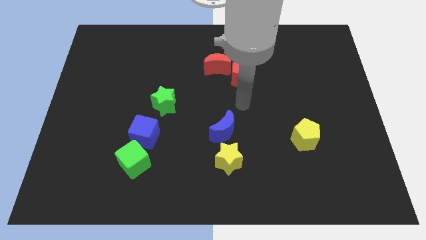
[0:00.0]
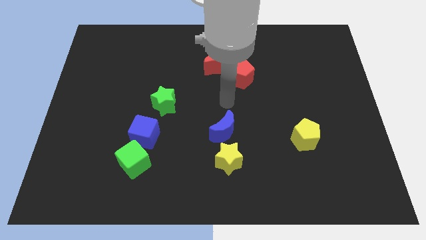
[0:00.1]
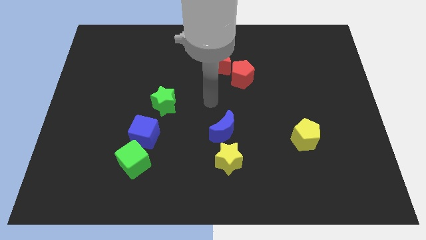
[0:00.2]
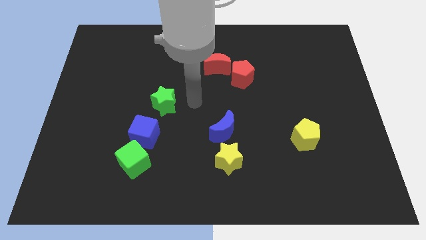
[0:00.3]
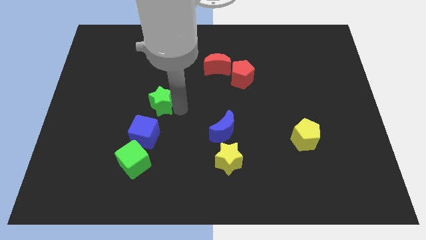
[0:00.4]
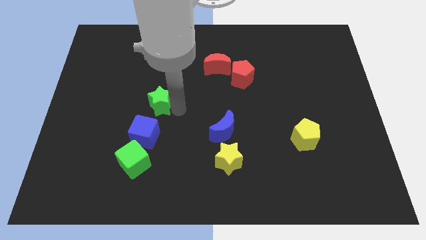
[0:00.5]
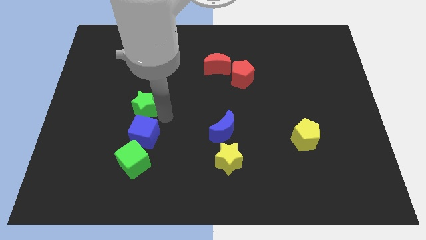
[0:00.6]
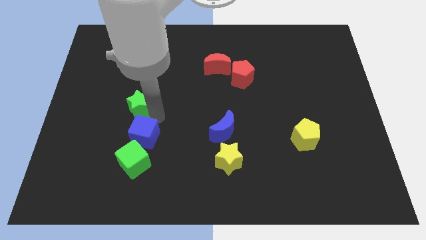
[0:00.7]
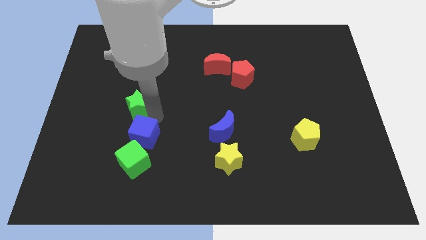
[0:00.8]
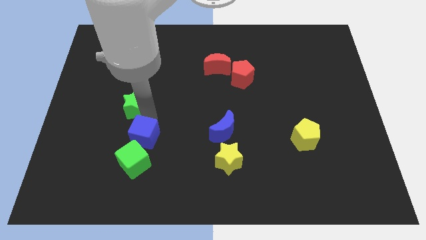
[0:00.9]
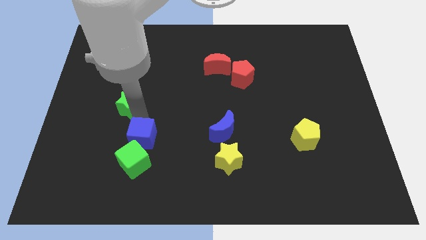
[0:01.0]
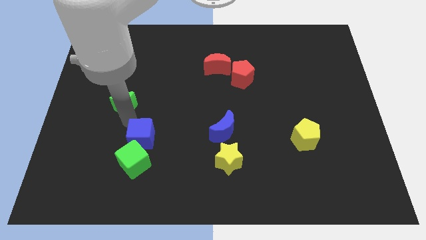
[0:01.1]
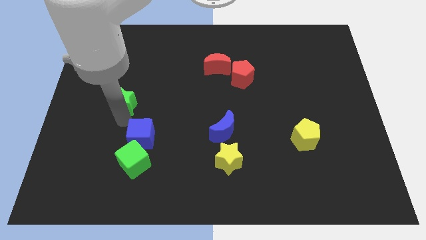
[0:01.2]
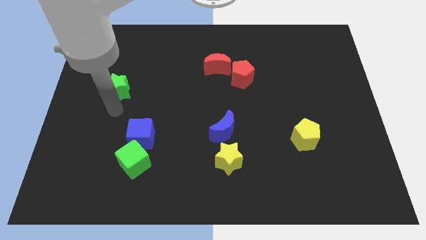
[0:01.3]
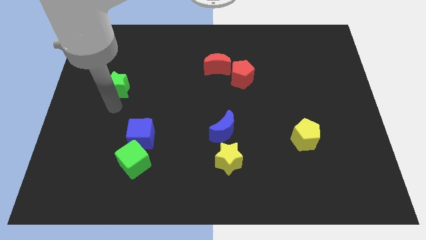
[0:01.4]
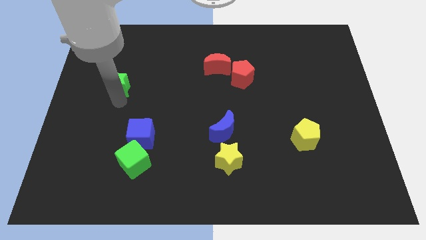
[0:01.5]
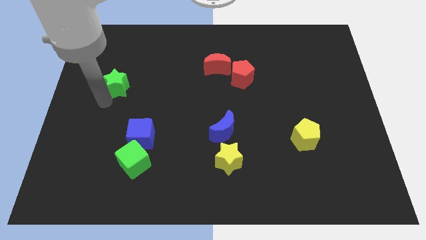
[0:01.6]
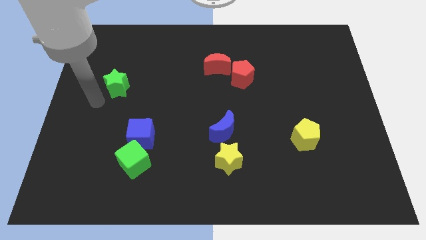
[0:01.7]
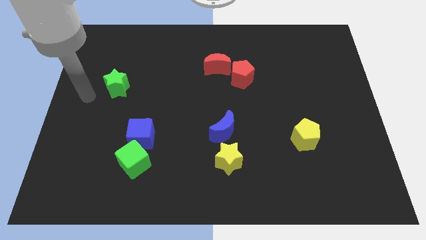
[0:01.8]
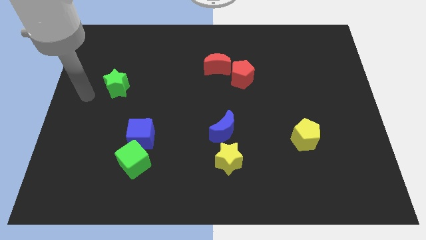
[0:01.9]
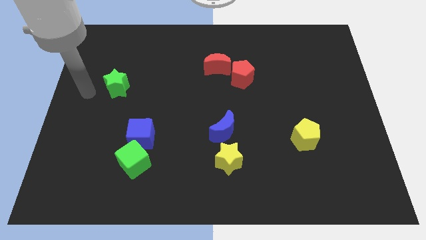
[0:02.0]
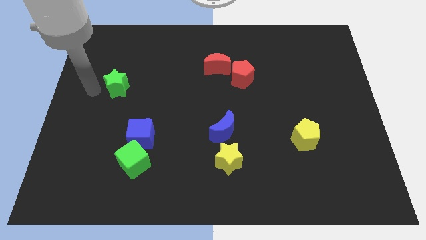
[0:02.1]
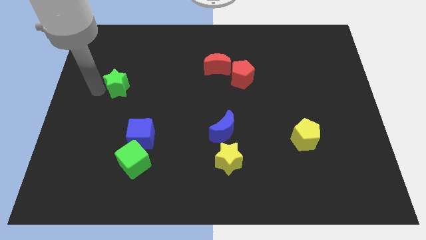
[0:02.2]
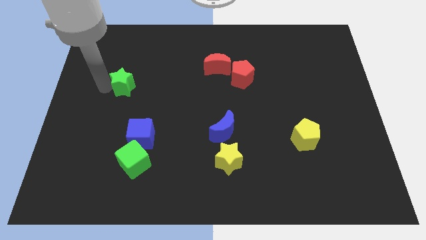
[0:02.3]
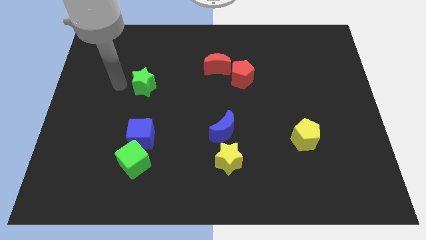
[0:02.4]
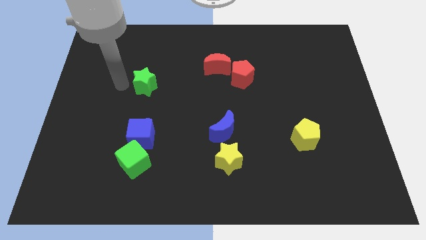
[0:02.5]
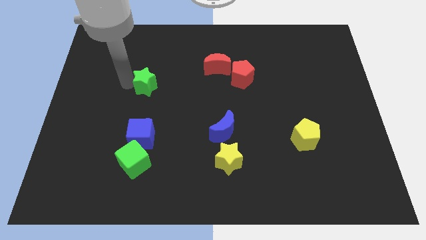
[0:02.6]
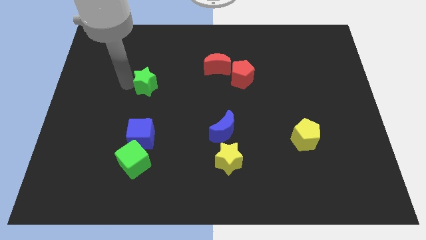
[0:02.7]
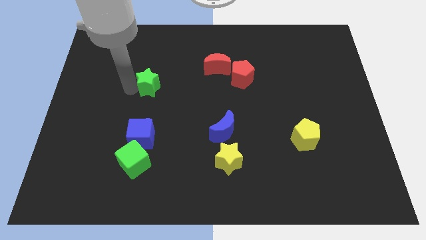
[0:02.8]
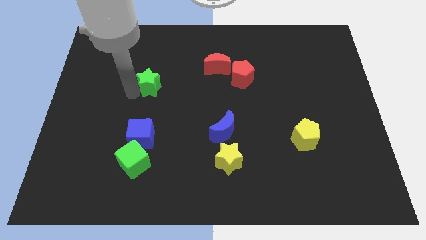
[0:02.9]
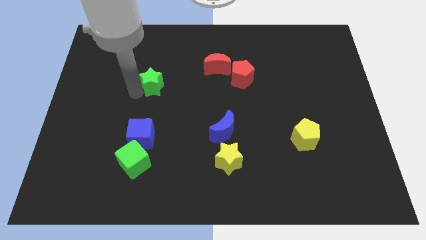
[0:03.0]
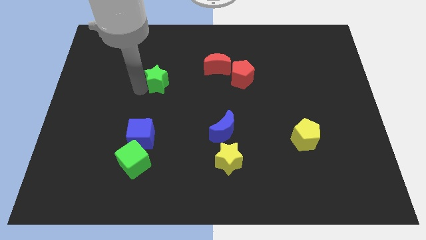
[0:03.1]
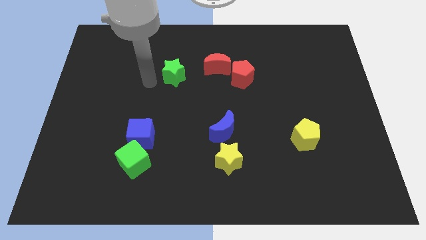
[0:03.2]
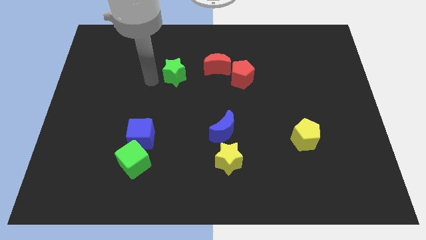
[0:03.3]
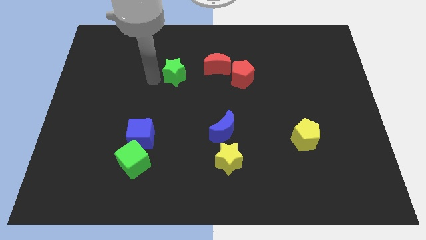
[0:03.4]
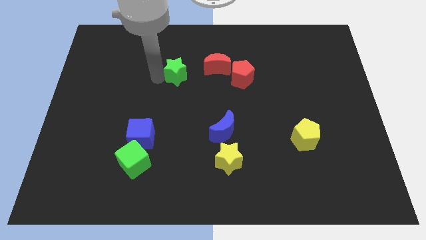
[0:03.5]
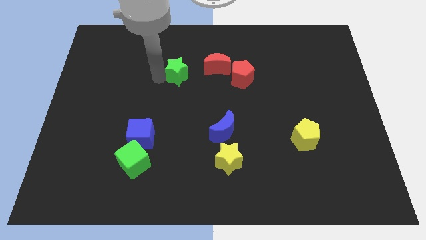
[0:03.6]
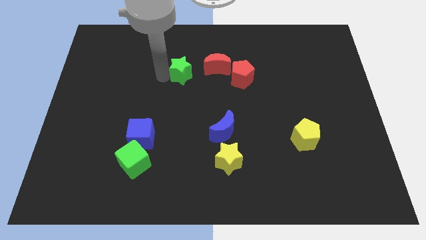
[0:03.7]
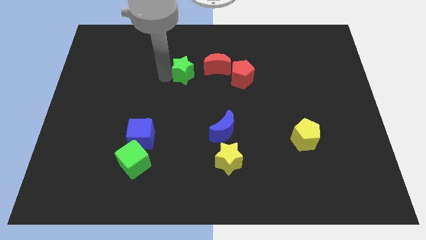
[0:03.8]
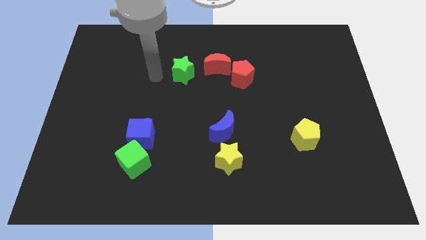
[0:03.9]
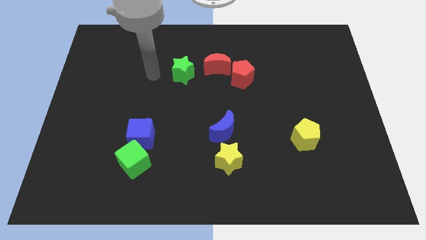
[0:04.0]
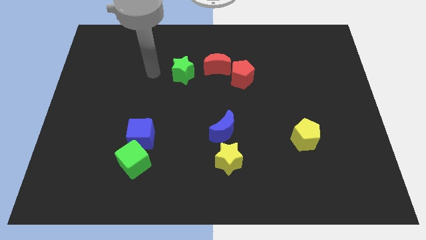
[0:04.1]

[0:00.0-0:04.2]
push the green star to the left of the red crescent

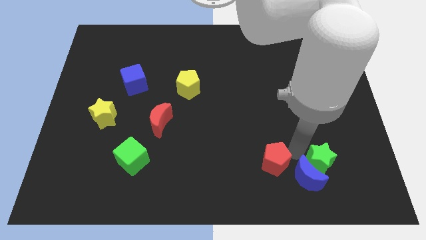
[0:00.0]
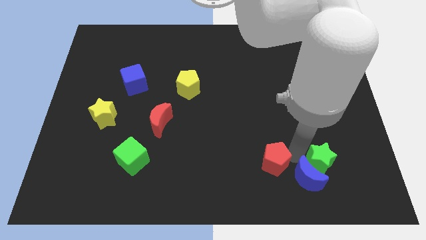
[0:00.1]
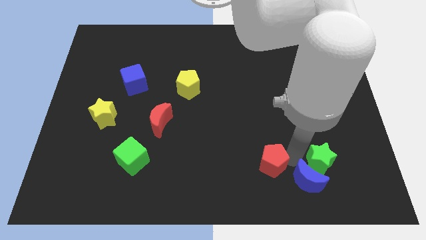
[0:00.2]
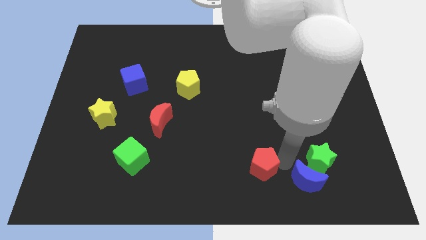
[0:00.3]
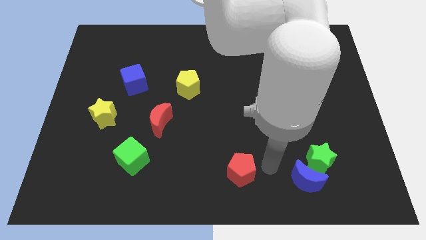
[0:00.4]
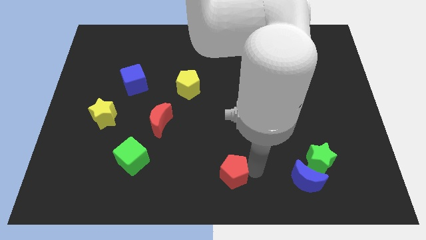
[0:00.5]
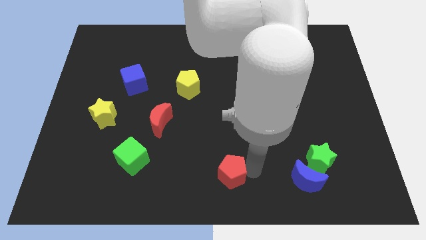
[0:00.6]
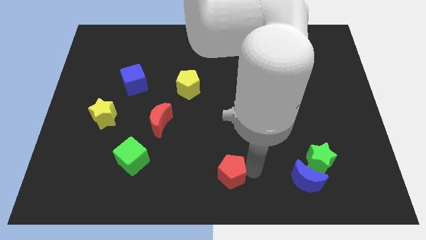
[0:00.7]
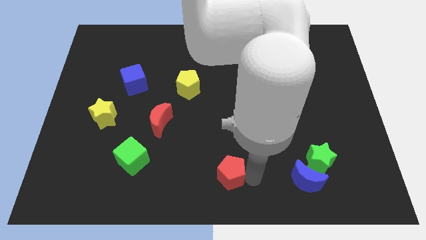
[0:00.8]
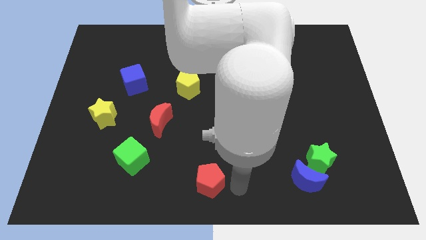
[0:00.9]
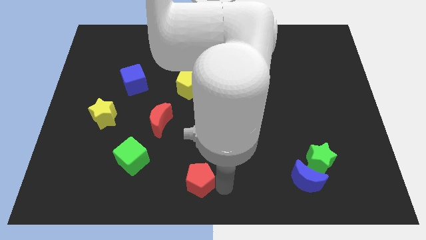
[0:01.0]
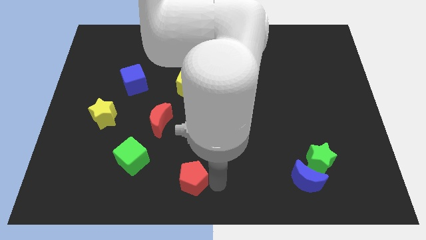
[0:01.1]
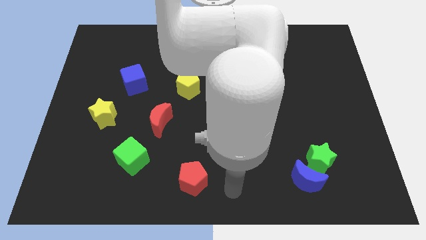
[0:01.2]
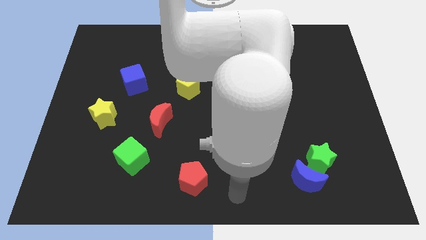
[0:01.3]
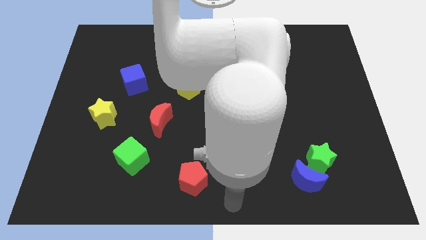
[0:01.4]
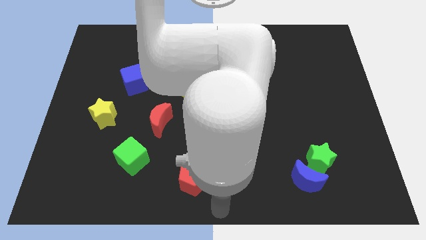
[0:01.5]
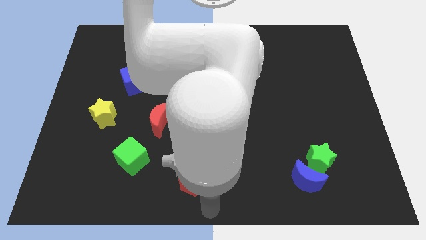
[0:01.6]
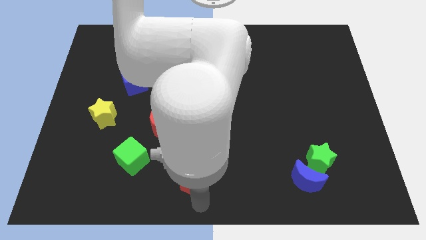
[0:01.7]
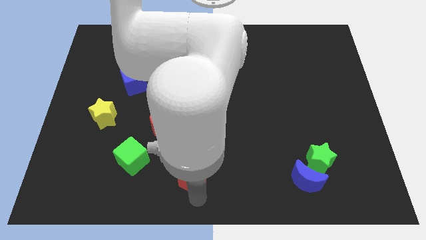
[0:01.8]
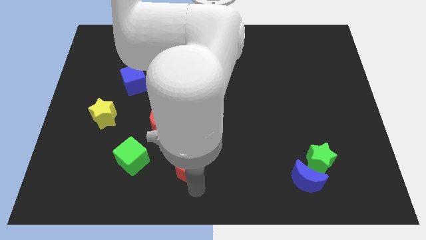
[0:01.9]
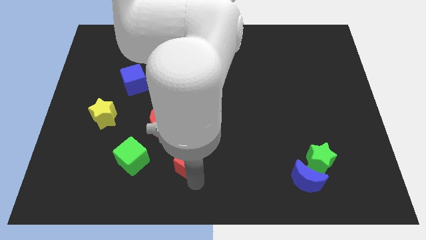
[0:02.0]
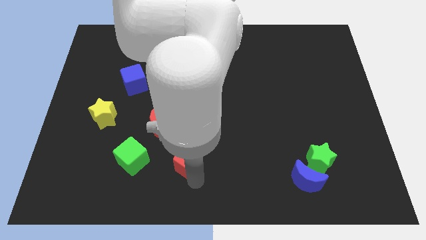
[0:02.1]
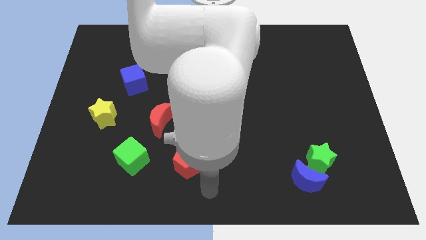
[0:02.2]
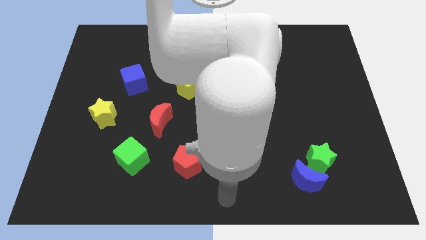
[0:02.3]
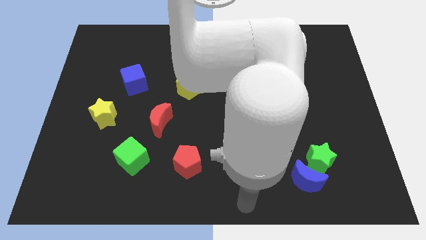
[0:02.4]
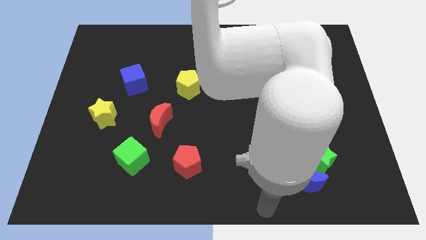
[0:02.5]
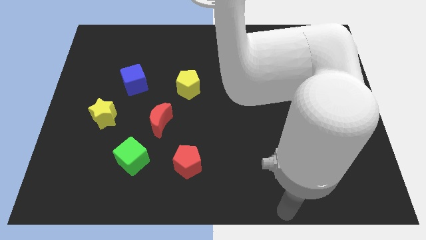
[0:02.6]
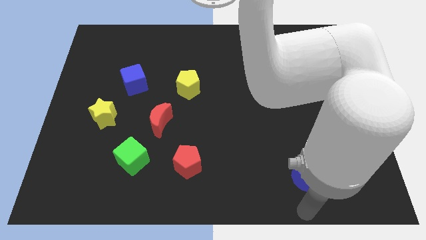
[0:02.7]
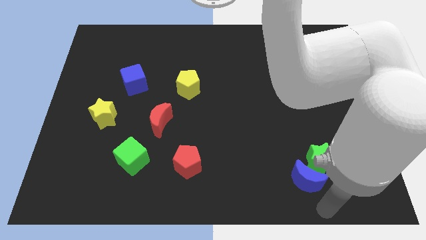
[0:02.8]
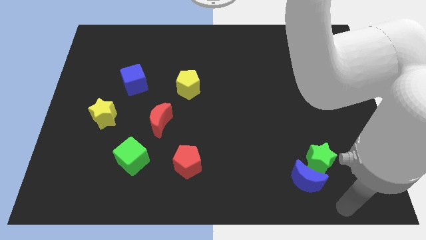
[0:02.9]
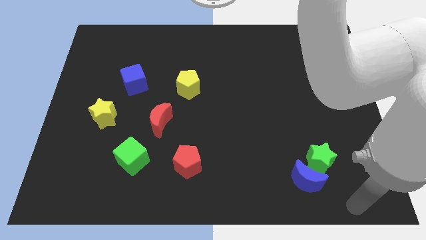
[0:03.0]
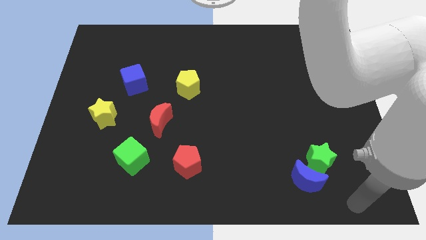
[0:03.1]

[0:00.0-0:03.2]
put red pentagon vertically below yellow pentagon

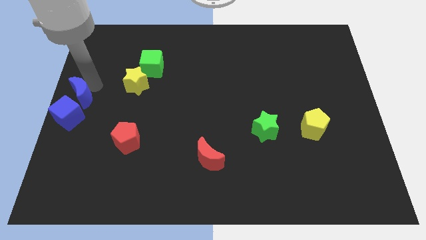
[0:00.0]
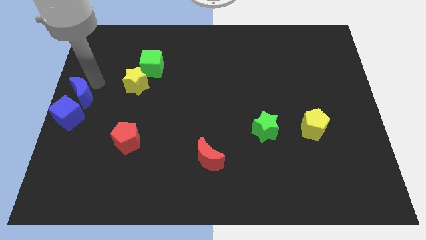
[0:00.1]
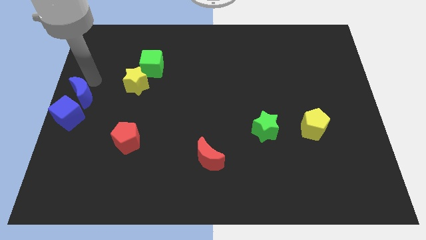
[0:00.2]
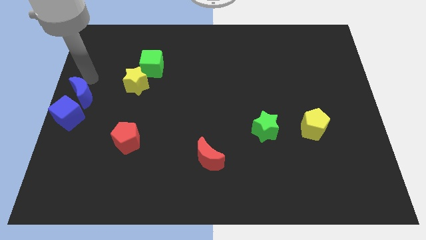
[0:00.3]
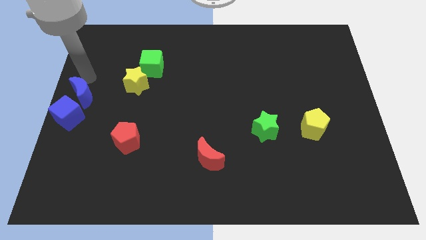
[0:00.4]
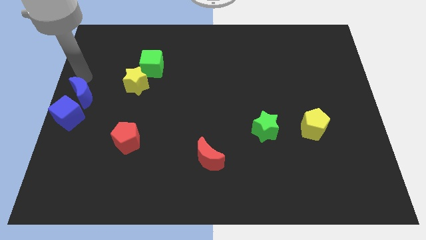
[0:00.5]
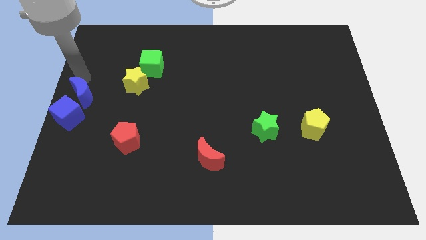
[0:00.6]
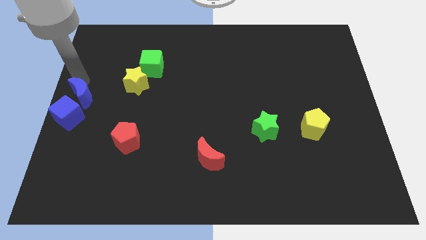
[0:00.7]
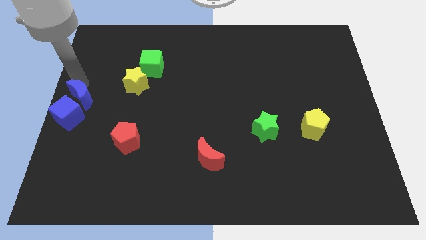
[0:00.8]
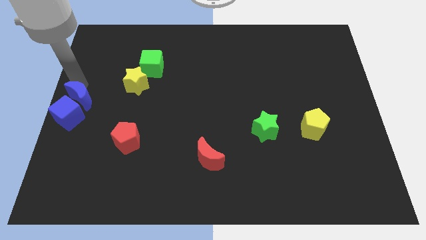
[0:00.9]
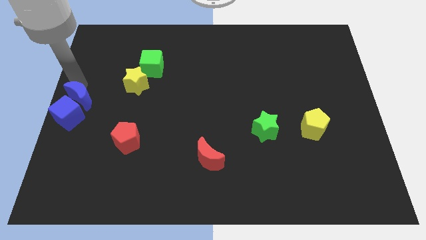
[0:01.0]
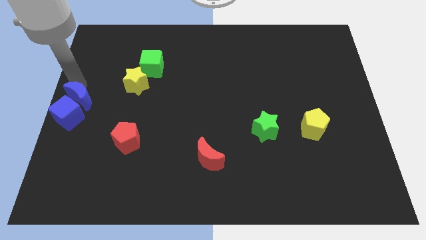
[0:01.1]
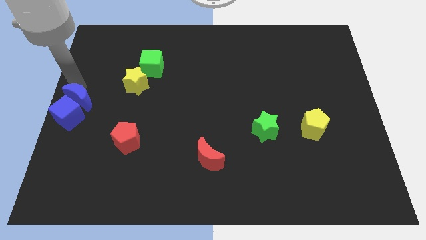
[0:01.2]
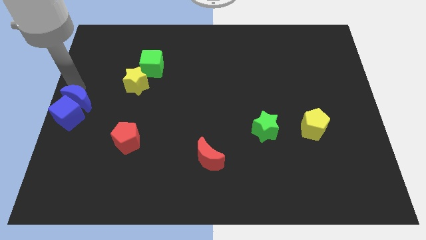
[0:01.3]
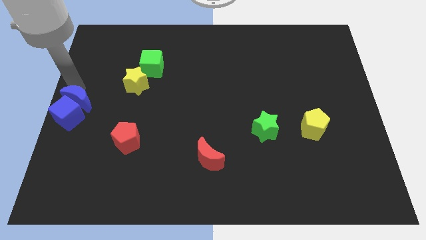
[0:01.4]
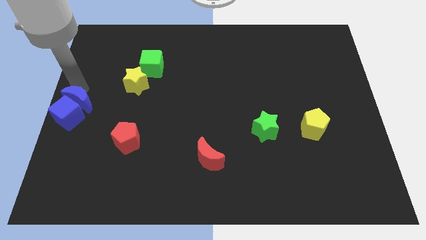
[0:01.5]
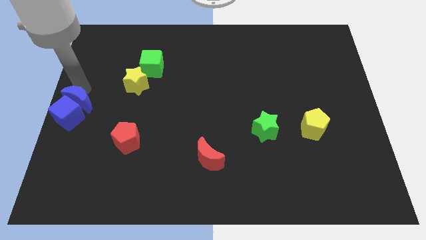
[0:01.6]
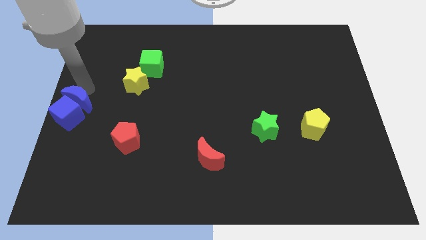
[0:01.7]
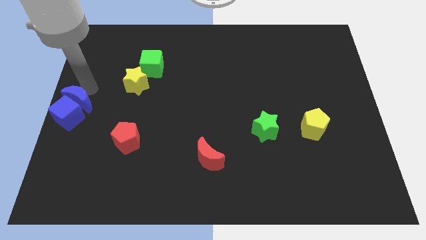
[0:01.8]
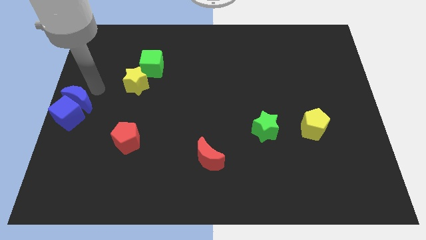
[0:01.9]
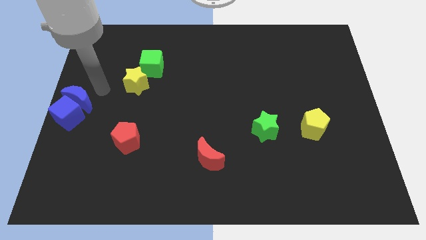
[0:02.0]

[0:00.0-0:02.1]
push blue moon on top of blue cube
